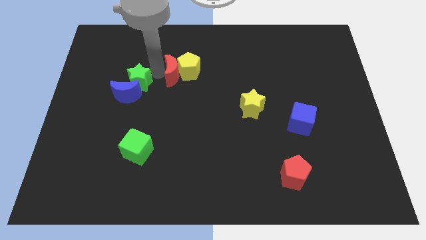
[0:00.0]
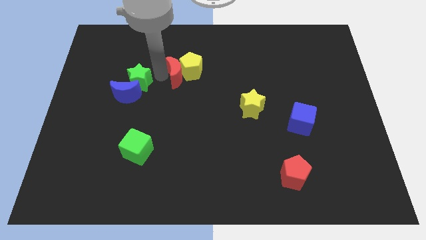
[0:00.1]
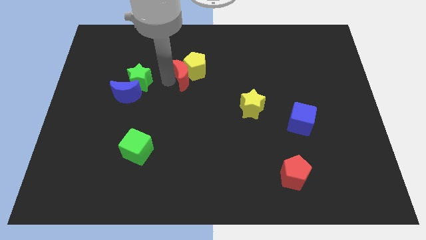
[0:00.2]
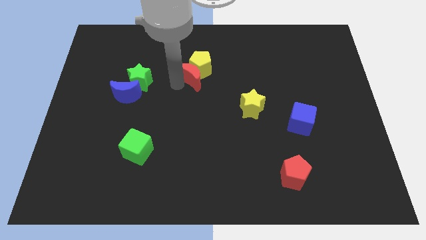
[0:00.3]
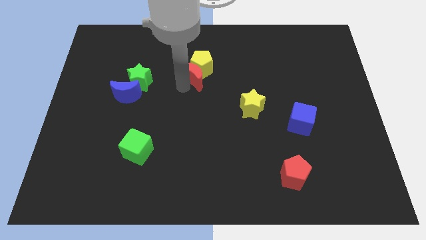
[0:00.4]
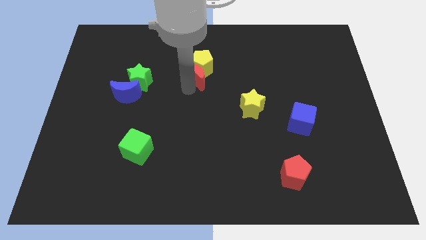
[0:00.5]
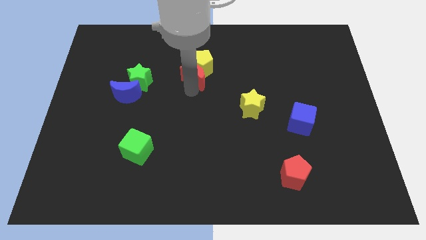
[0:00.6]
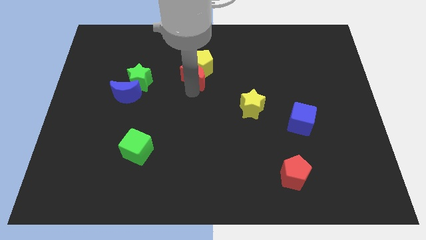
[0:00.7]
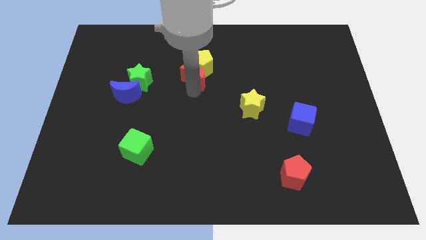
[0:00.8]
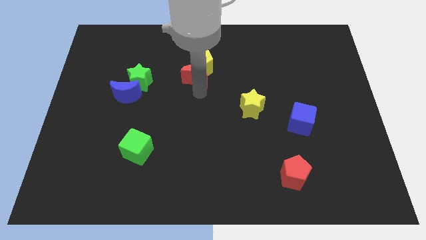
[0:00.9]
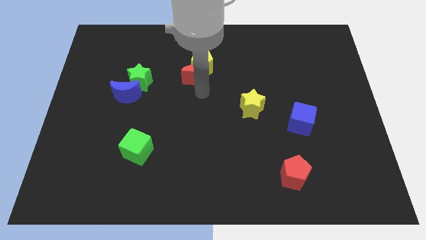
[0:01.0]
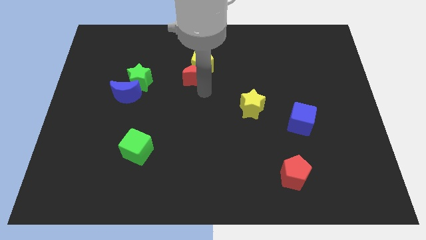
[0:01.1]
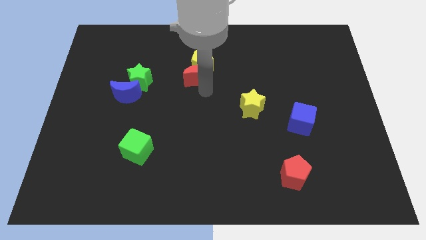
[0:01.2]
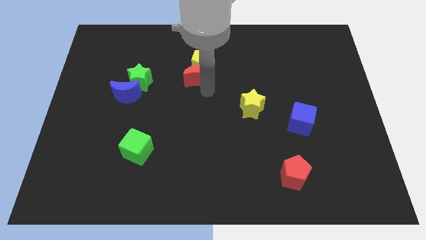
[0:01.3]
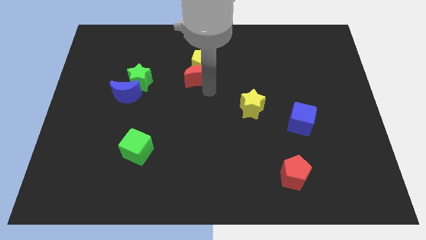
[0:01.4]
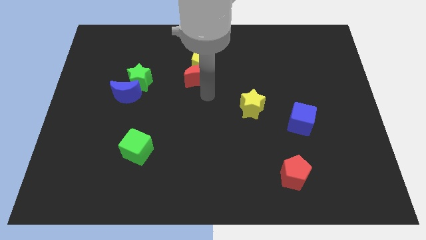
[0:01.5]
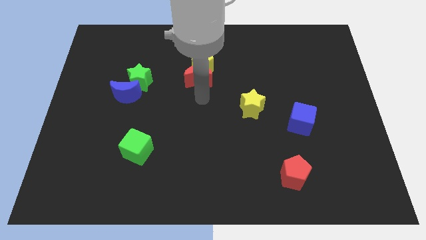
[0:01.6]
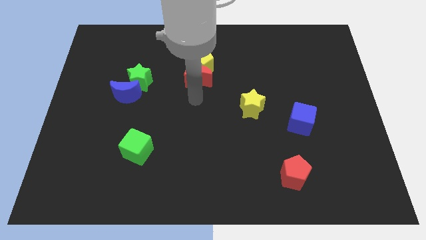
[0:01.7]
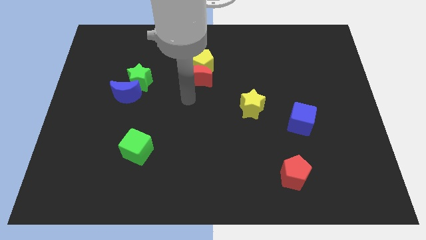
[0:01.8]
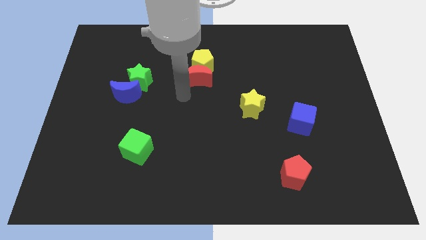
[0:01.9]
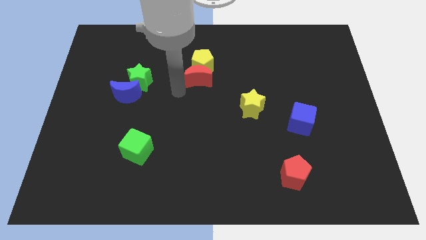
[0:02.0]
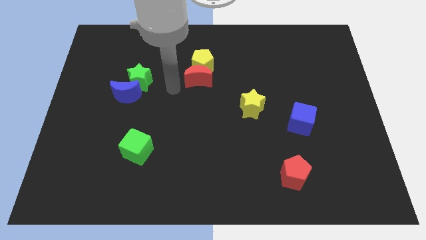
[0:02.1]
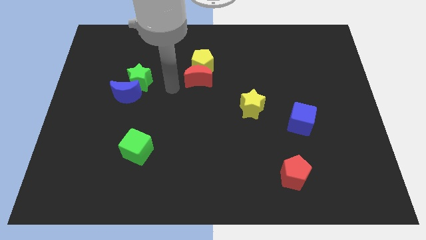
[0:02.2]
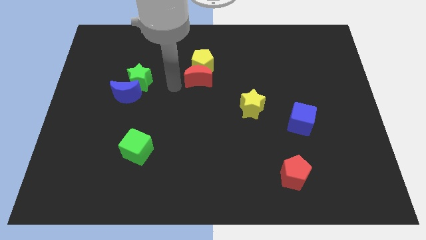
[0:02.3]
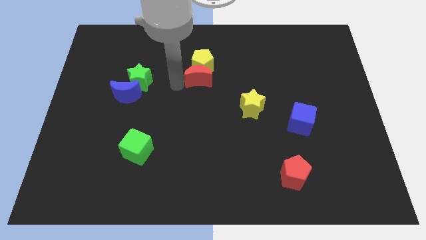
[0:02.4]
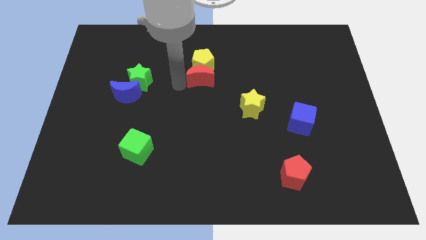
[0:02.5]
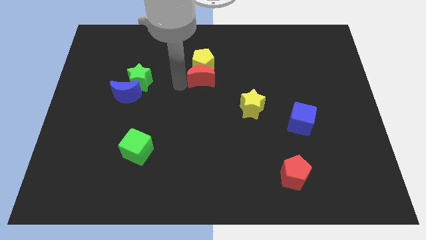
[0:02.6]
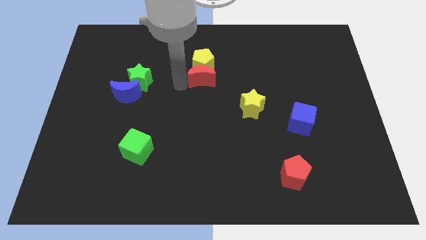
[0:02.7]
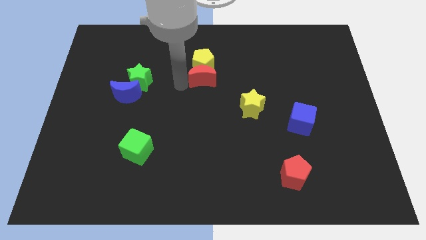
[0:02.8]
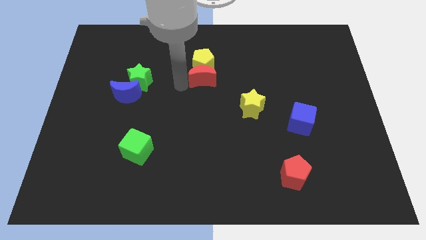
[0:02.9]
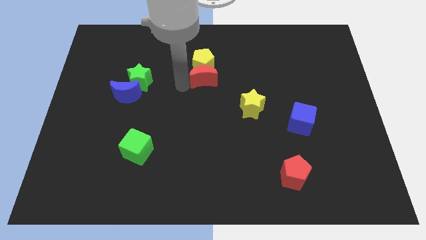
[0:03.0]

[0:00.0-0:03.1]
place red moon below yellow pentagon

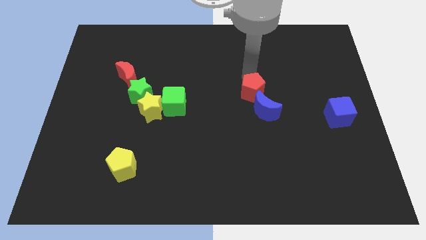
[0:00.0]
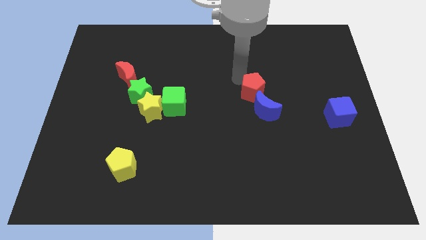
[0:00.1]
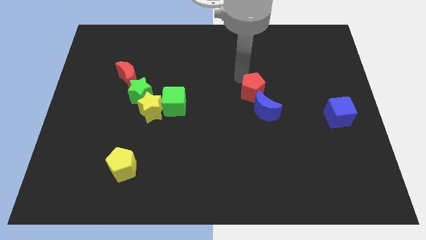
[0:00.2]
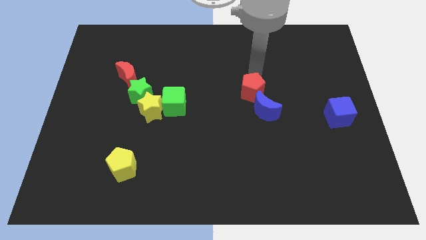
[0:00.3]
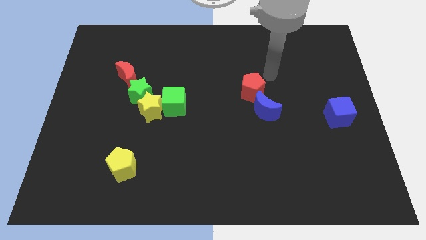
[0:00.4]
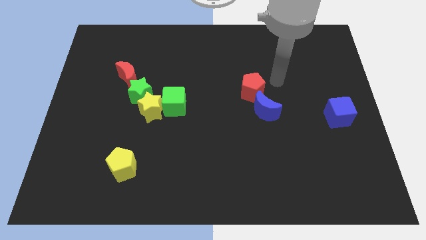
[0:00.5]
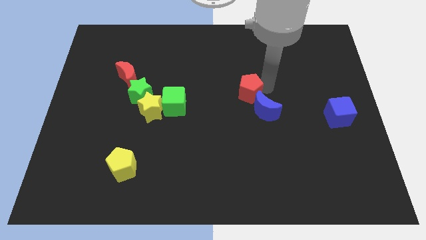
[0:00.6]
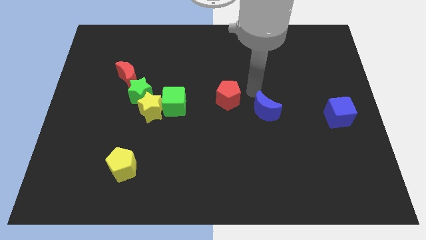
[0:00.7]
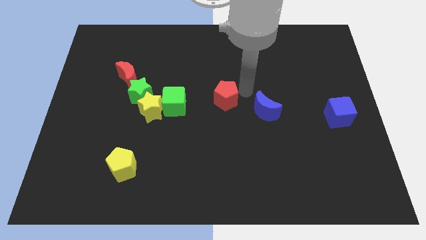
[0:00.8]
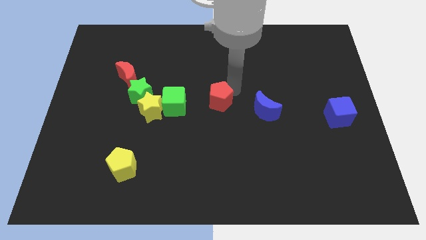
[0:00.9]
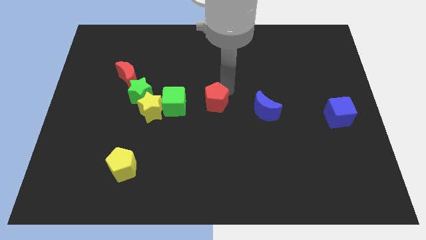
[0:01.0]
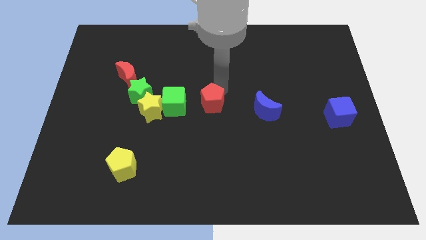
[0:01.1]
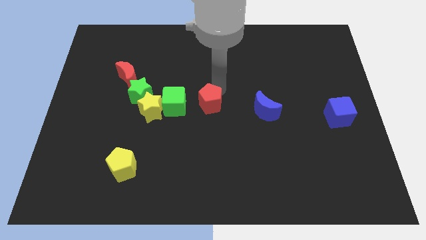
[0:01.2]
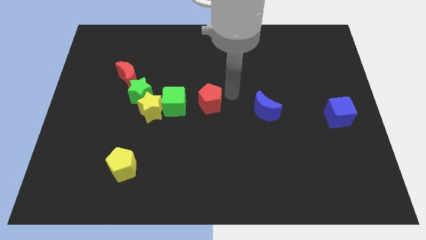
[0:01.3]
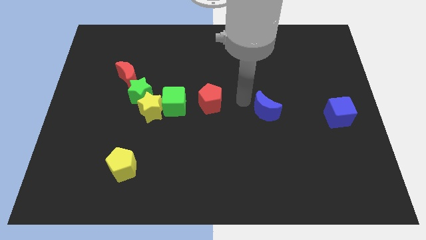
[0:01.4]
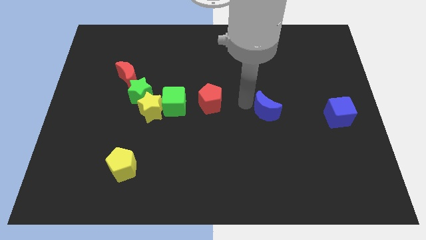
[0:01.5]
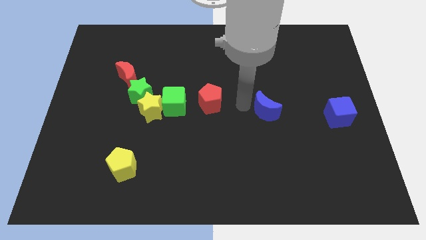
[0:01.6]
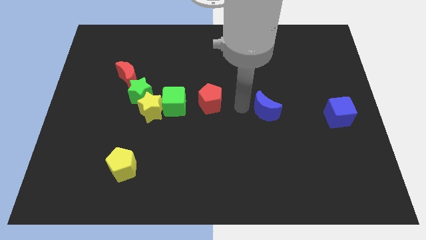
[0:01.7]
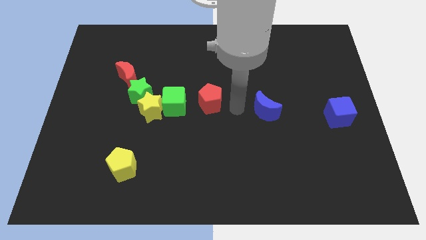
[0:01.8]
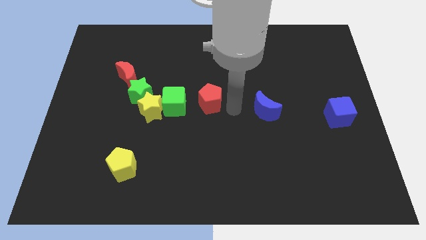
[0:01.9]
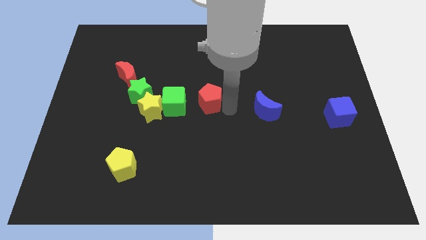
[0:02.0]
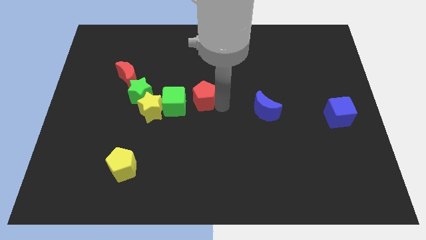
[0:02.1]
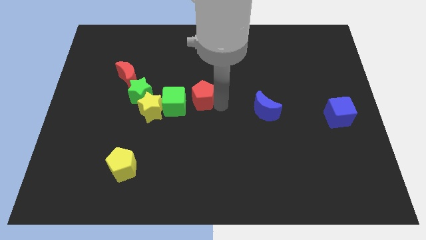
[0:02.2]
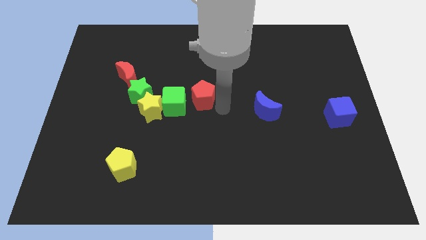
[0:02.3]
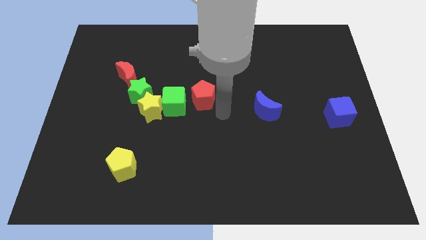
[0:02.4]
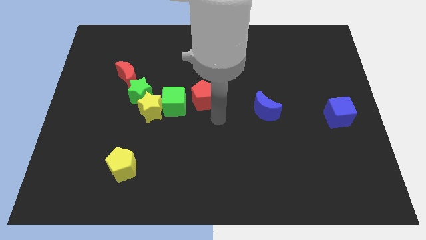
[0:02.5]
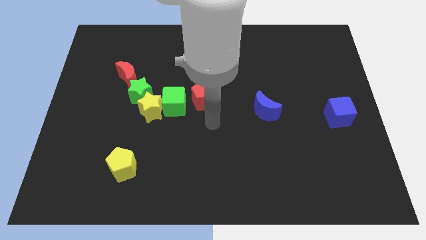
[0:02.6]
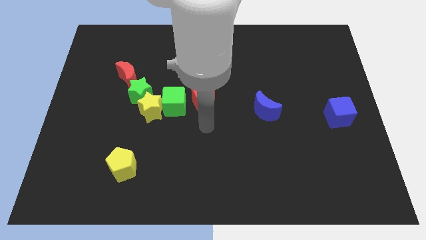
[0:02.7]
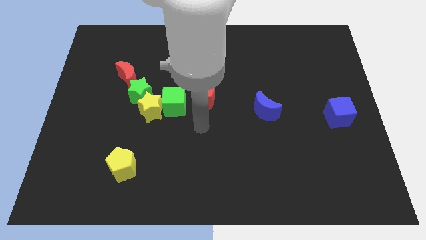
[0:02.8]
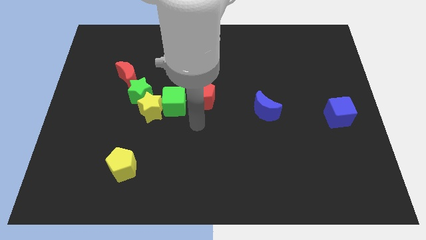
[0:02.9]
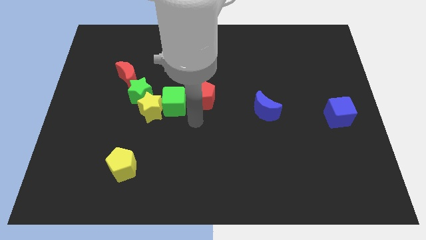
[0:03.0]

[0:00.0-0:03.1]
move the red pentagon slightly to the right side of the green cube

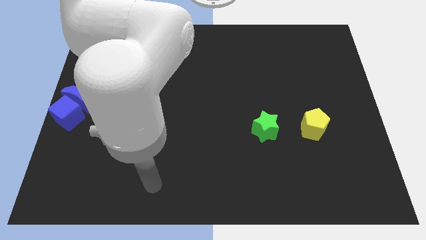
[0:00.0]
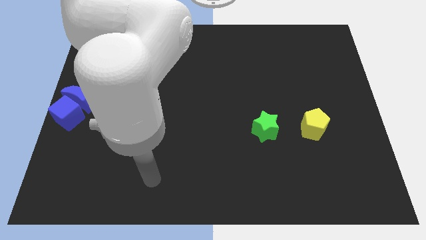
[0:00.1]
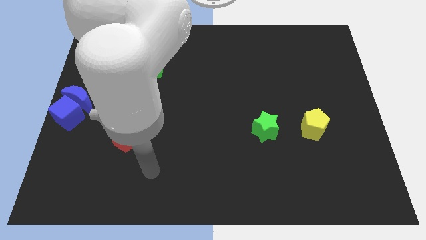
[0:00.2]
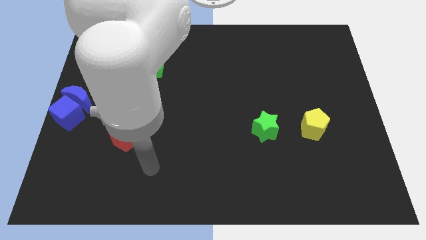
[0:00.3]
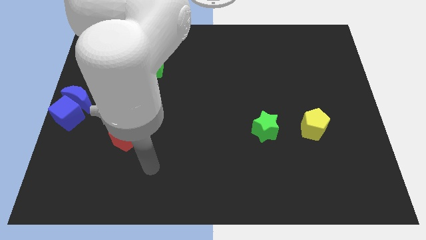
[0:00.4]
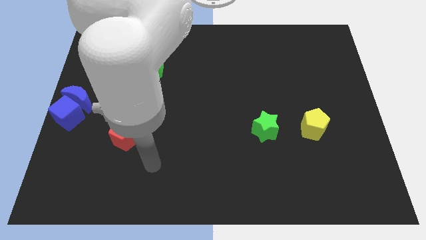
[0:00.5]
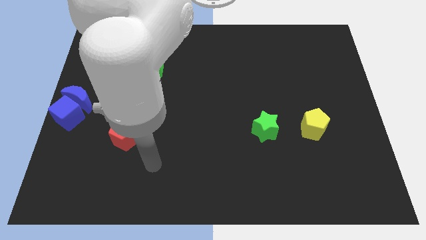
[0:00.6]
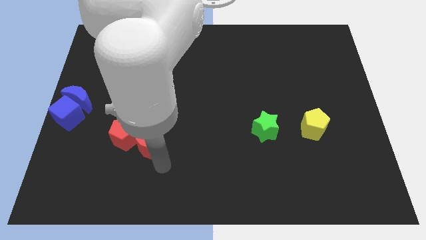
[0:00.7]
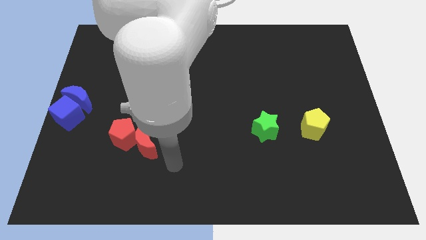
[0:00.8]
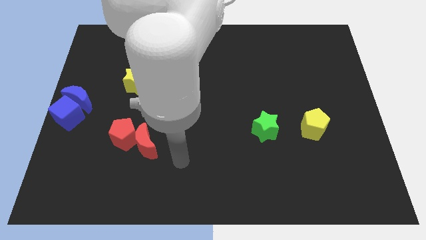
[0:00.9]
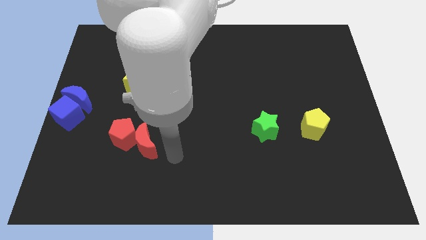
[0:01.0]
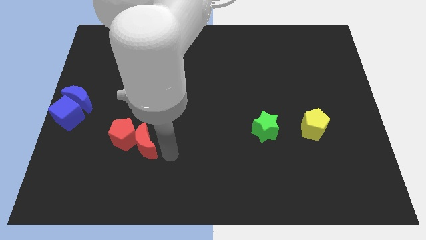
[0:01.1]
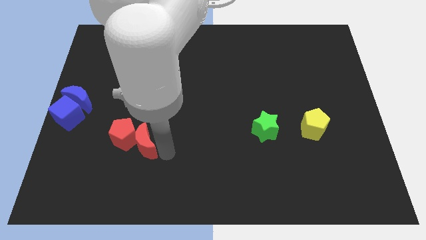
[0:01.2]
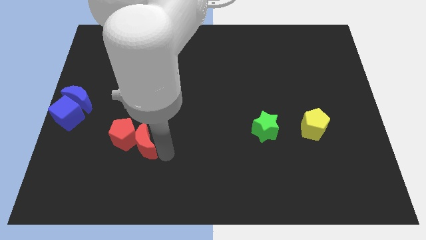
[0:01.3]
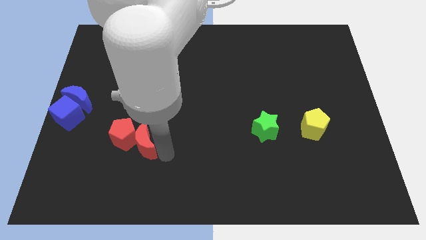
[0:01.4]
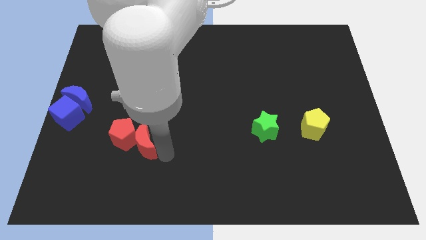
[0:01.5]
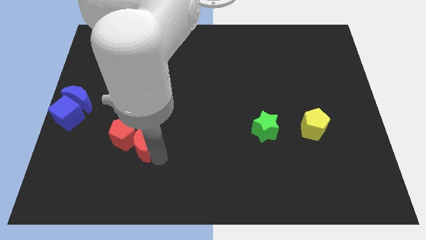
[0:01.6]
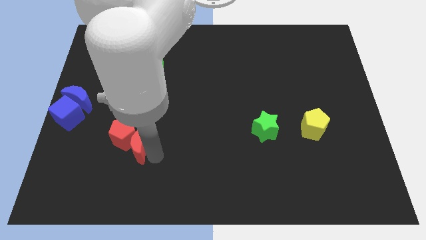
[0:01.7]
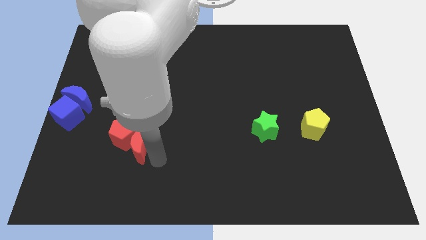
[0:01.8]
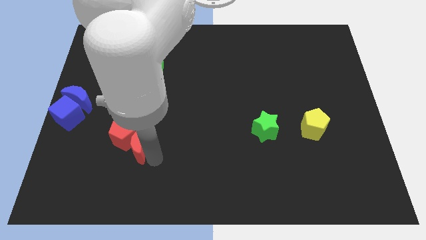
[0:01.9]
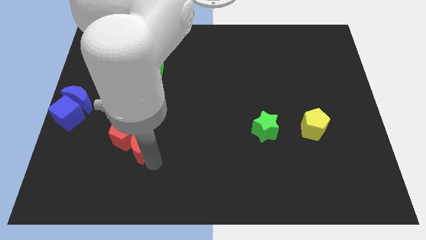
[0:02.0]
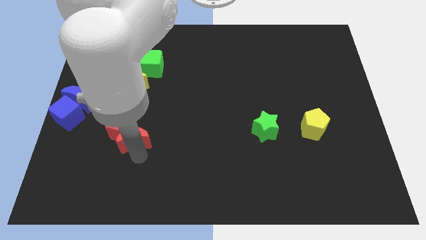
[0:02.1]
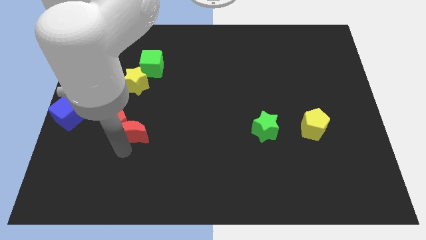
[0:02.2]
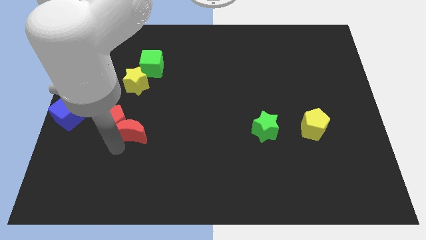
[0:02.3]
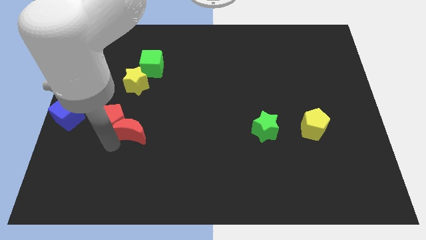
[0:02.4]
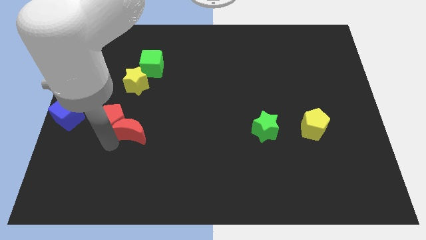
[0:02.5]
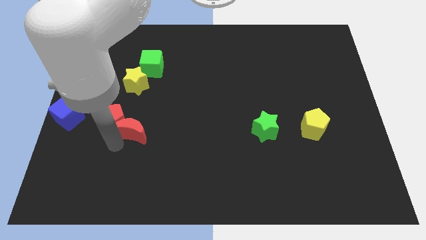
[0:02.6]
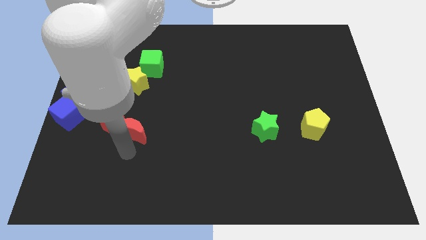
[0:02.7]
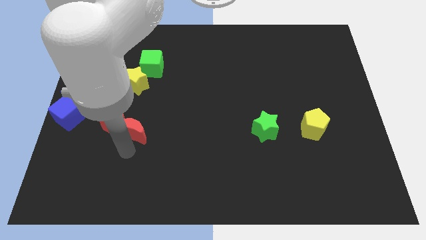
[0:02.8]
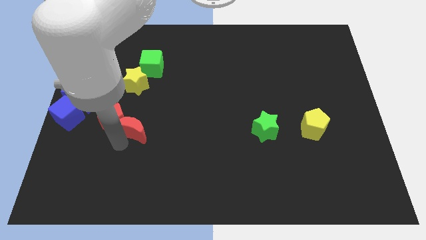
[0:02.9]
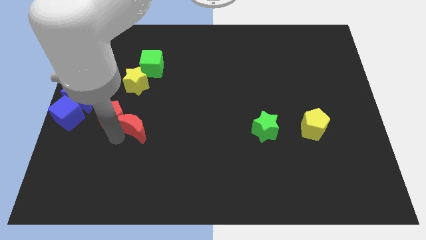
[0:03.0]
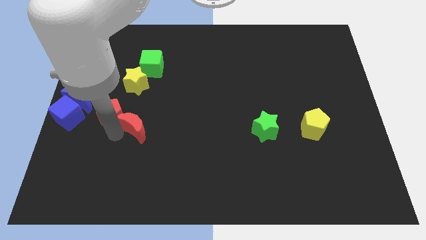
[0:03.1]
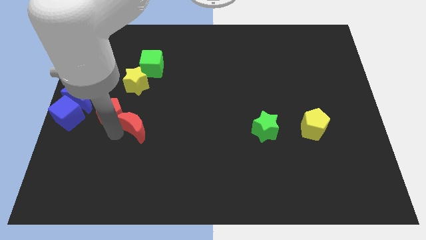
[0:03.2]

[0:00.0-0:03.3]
move the red pentagon towards the top left
